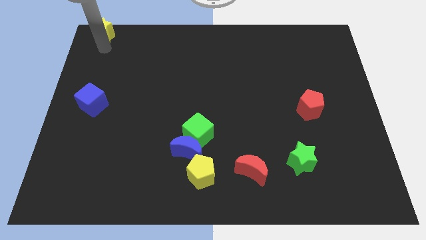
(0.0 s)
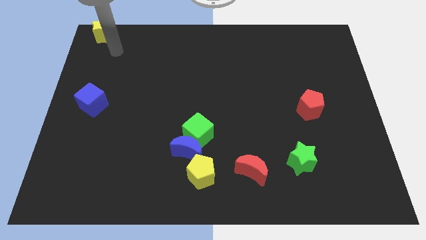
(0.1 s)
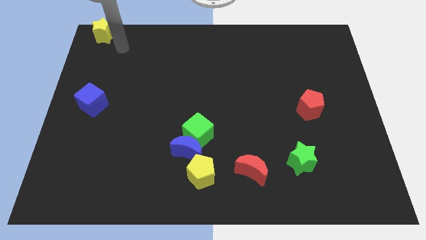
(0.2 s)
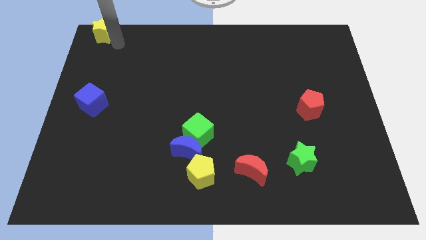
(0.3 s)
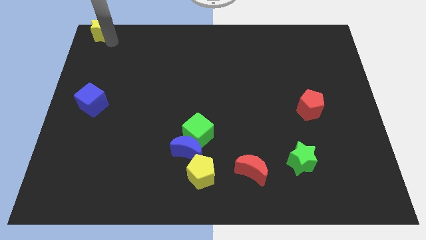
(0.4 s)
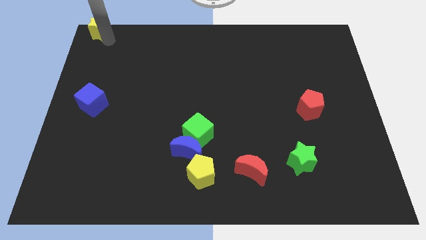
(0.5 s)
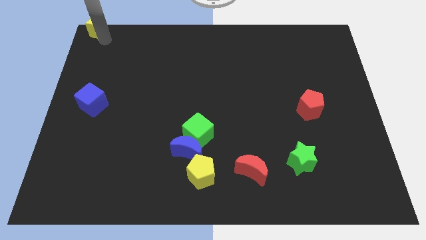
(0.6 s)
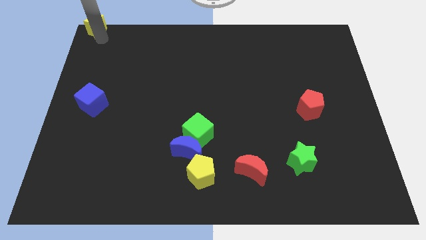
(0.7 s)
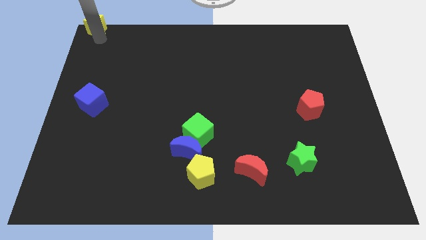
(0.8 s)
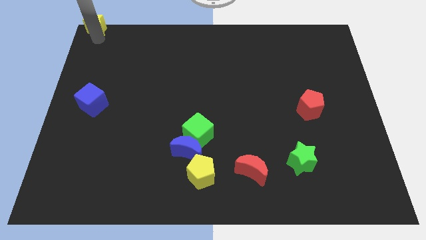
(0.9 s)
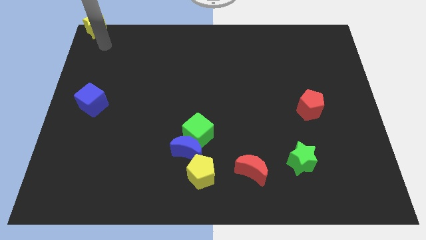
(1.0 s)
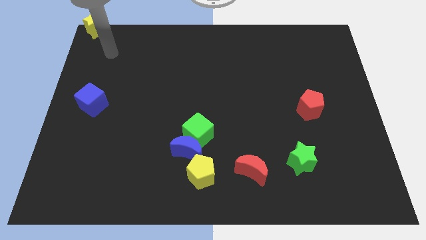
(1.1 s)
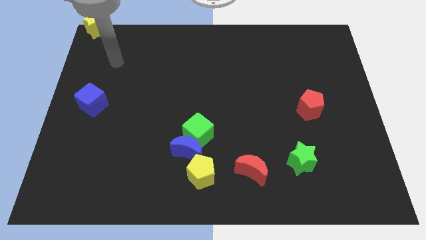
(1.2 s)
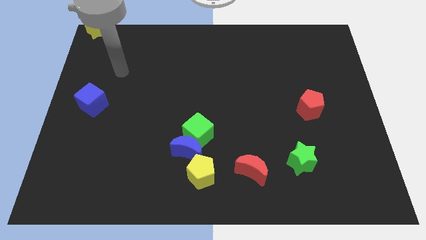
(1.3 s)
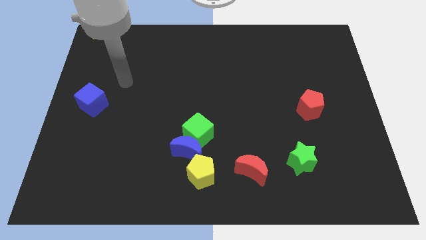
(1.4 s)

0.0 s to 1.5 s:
place yellow star to the top left corner of the board

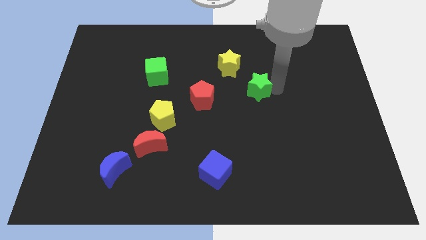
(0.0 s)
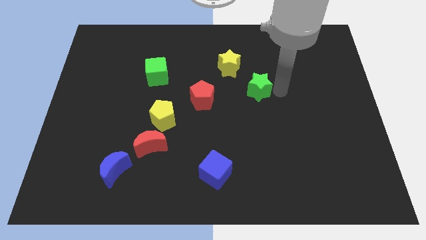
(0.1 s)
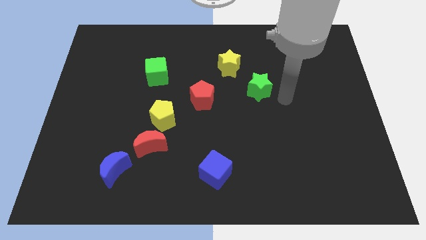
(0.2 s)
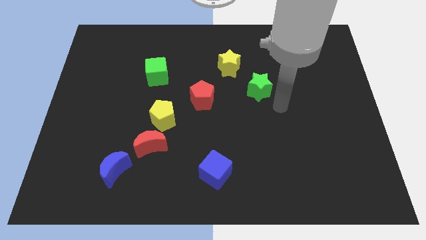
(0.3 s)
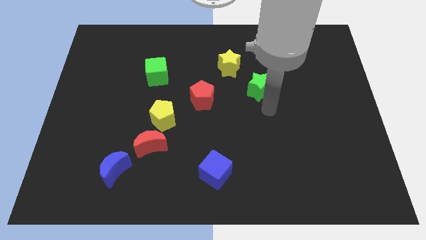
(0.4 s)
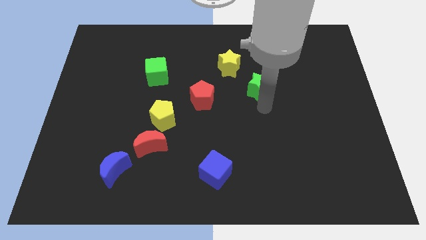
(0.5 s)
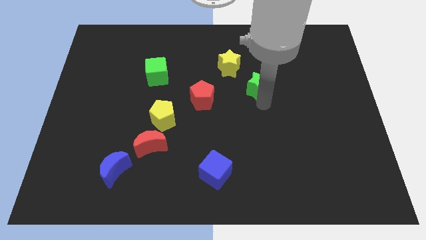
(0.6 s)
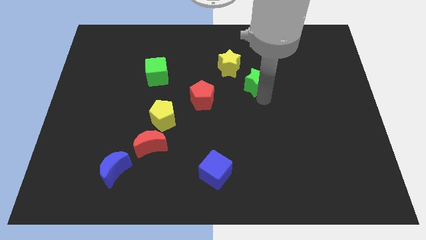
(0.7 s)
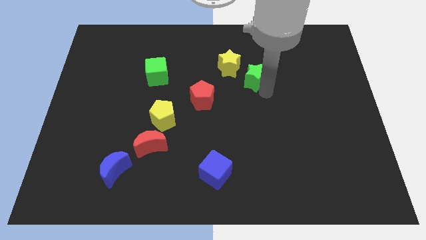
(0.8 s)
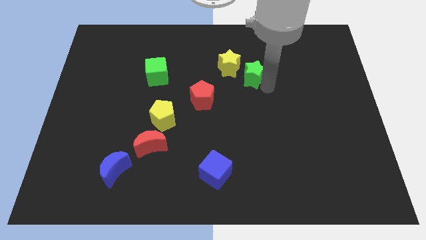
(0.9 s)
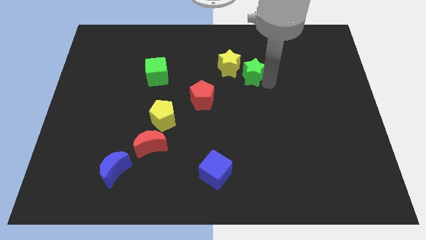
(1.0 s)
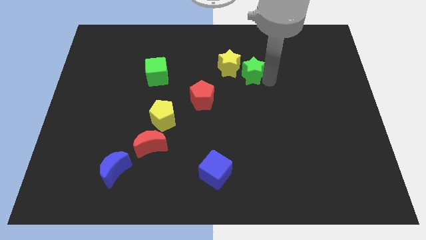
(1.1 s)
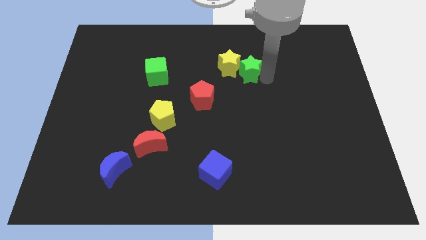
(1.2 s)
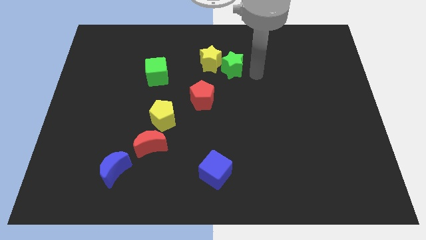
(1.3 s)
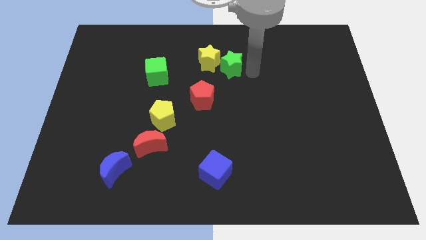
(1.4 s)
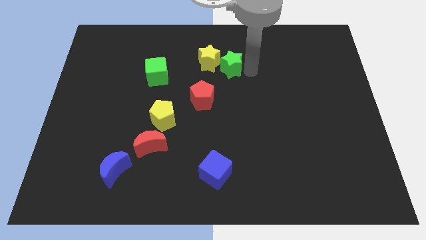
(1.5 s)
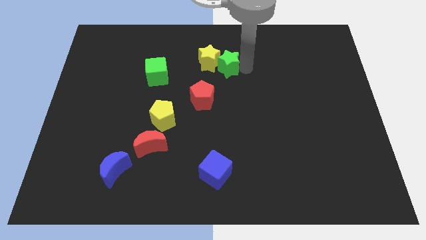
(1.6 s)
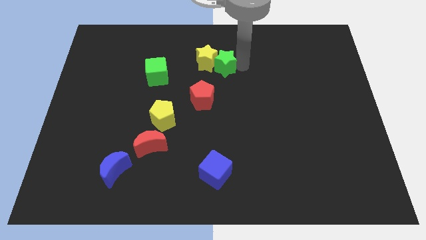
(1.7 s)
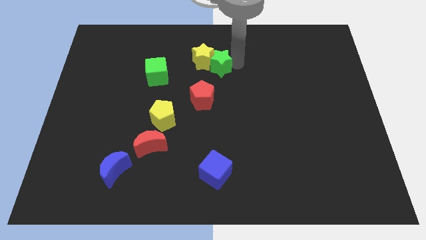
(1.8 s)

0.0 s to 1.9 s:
push the green star into the right side of the yellow star

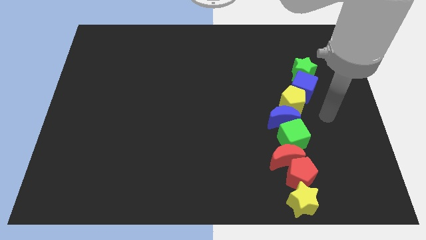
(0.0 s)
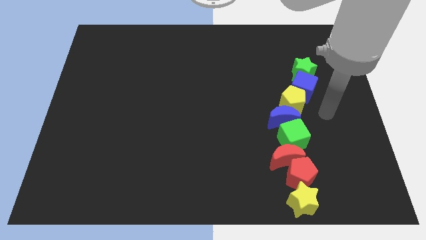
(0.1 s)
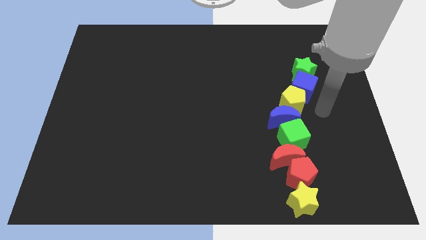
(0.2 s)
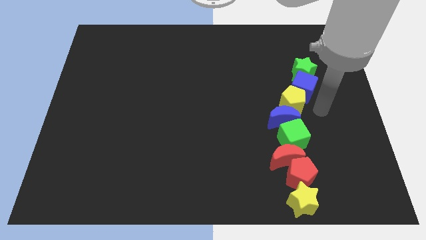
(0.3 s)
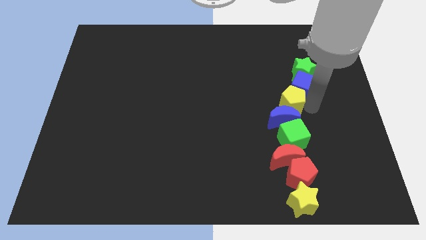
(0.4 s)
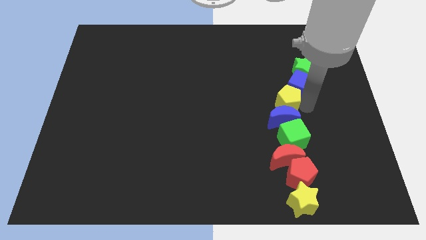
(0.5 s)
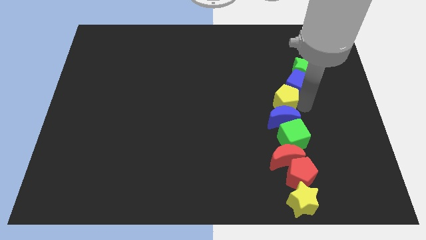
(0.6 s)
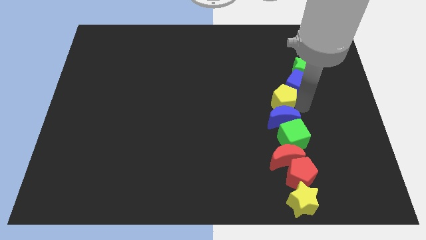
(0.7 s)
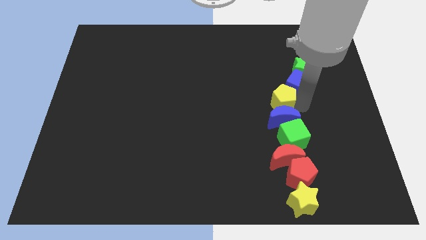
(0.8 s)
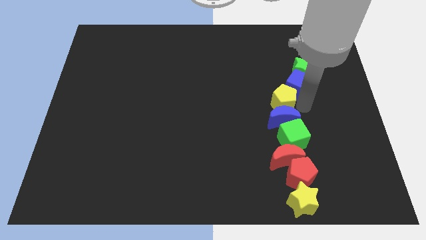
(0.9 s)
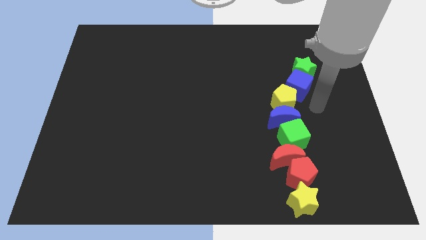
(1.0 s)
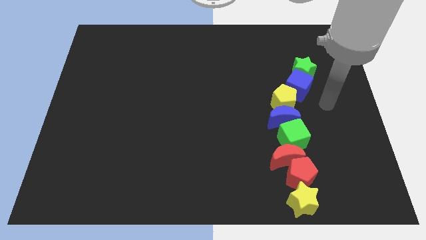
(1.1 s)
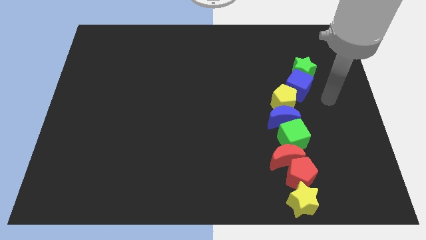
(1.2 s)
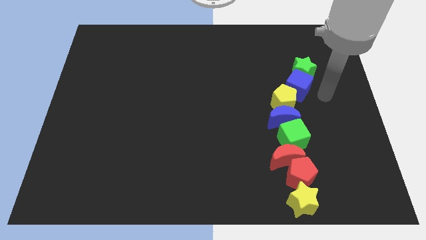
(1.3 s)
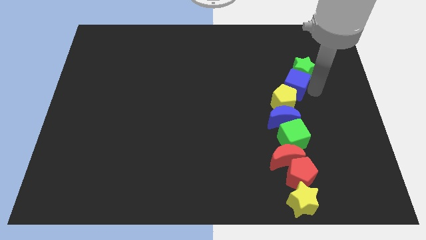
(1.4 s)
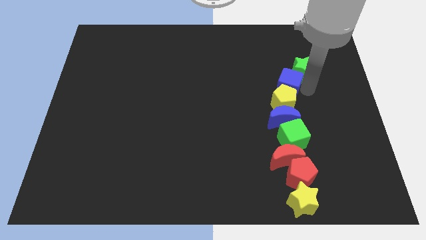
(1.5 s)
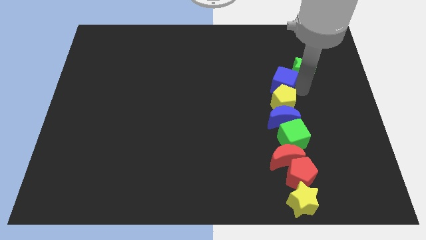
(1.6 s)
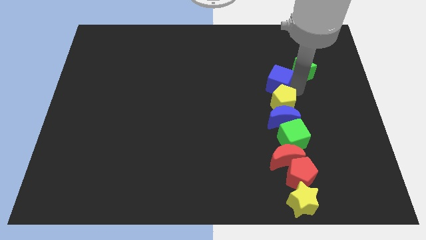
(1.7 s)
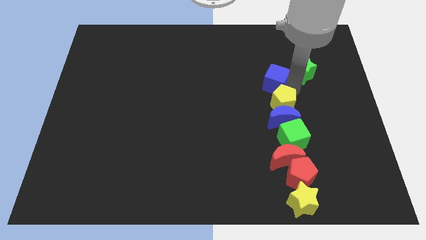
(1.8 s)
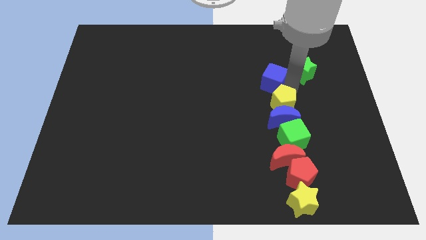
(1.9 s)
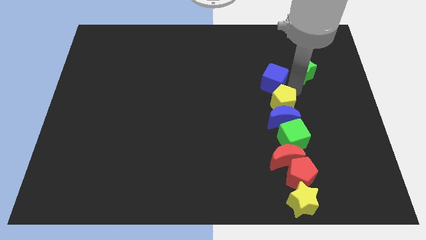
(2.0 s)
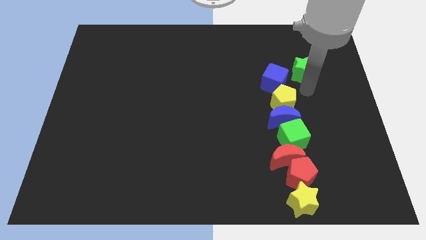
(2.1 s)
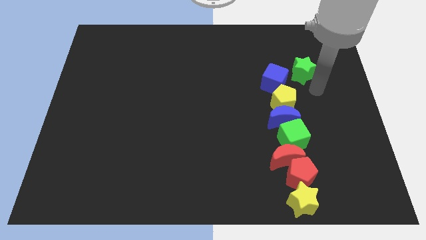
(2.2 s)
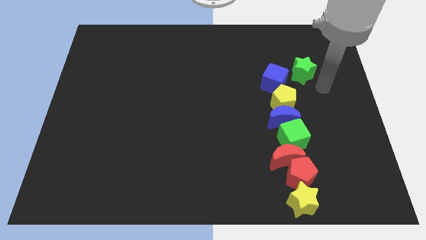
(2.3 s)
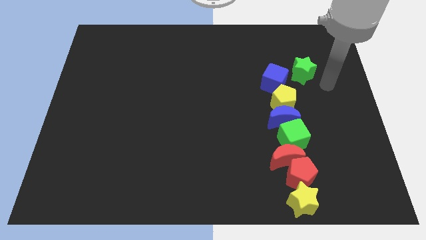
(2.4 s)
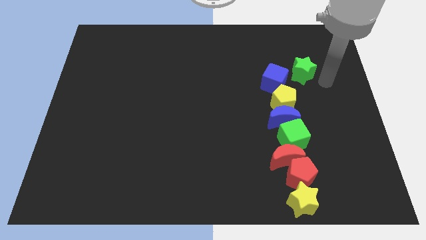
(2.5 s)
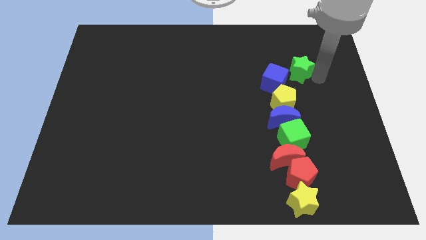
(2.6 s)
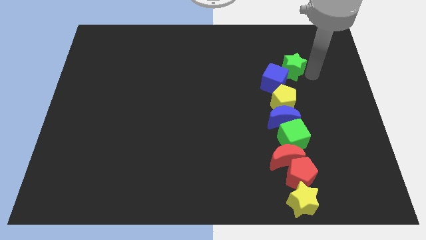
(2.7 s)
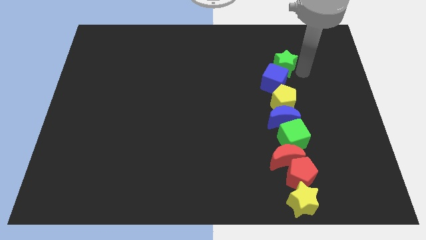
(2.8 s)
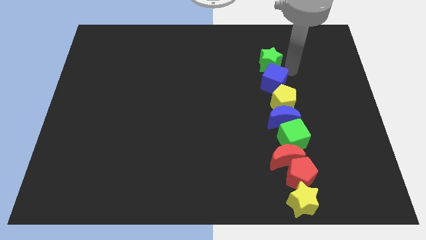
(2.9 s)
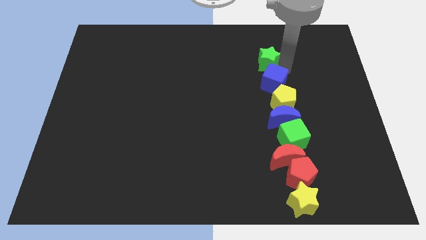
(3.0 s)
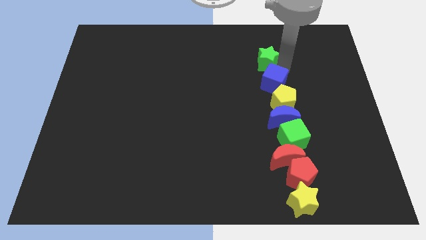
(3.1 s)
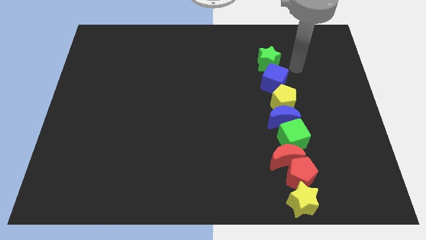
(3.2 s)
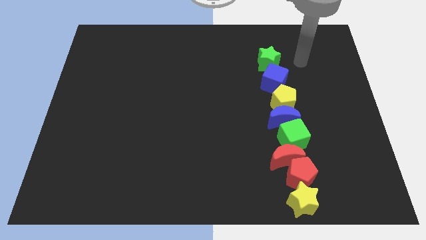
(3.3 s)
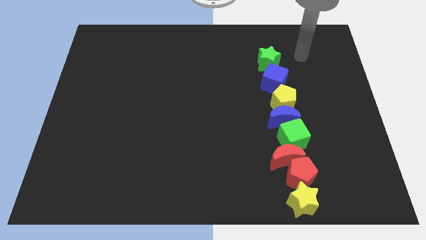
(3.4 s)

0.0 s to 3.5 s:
adjust the yellow pentagon blue cube and green star in a line at the top of the blue moon

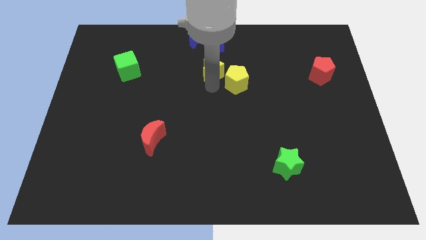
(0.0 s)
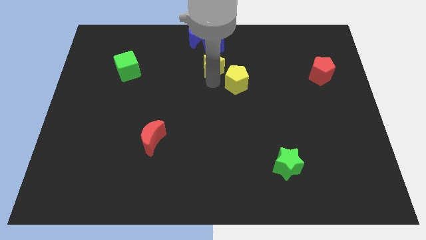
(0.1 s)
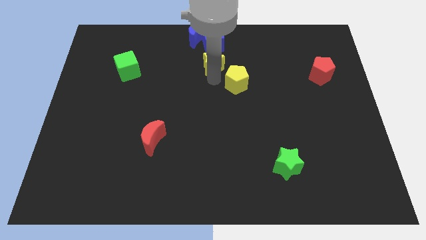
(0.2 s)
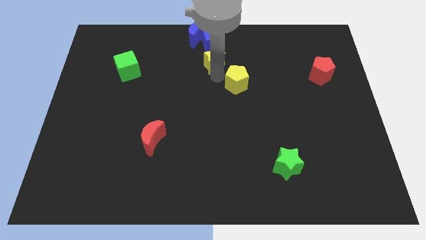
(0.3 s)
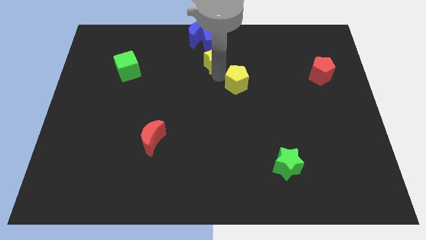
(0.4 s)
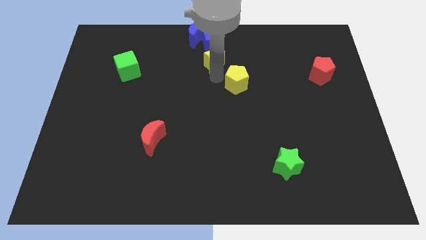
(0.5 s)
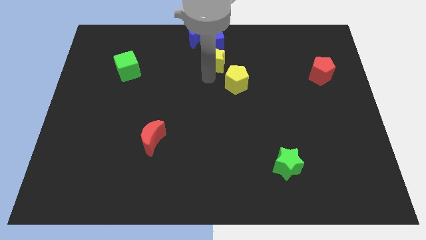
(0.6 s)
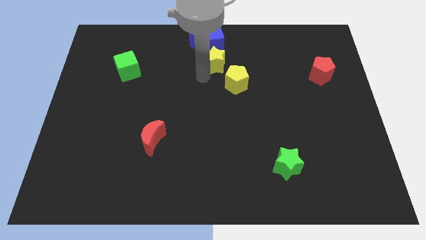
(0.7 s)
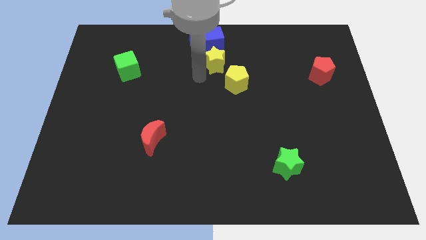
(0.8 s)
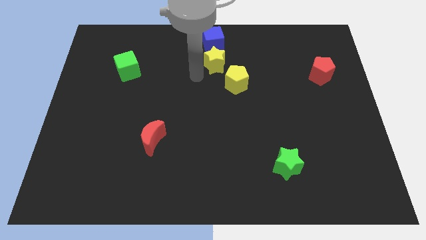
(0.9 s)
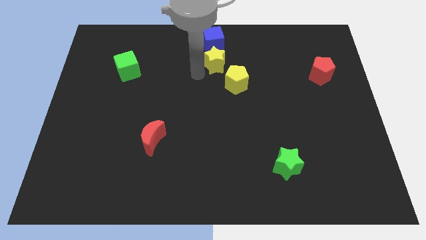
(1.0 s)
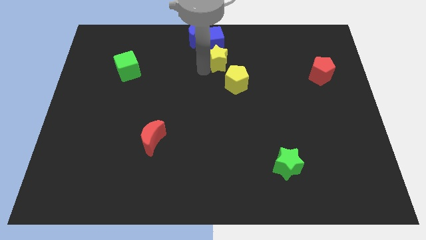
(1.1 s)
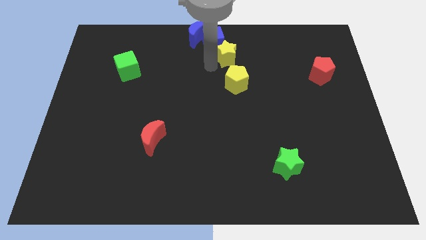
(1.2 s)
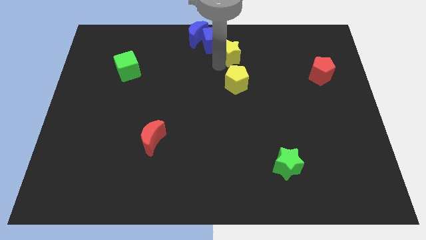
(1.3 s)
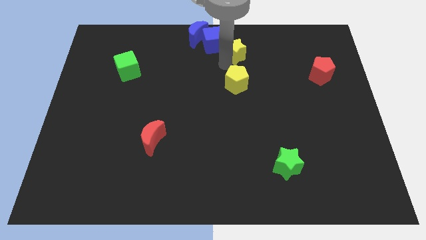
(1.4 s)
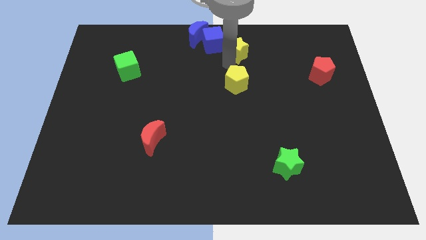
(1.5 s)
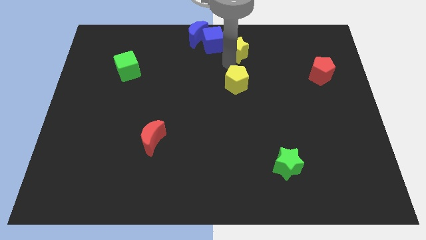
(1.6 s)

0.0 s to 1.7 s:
place yellow star below the blue cube

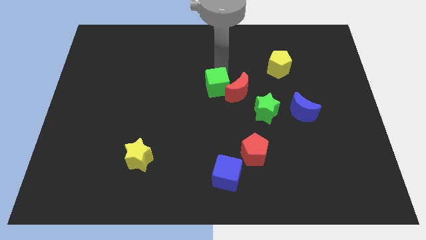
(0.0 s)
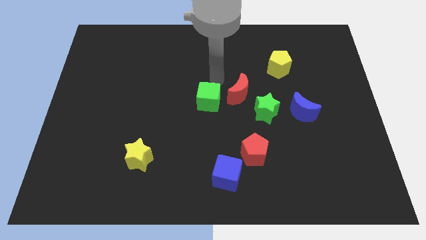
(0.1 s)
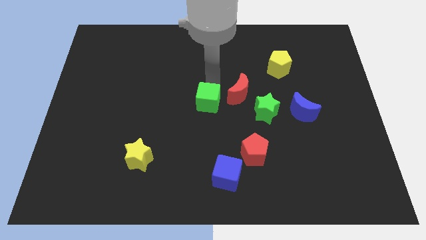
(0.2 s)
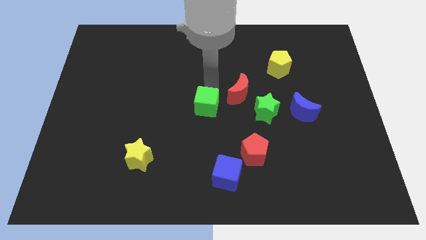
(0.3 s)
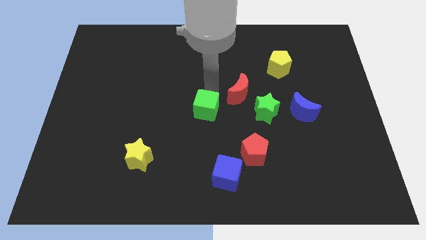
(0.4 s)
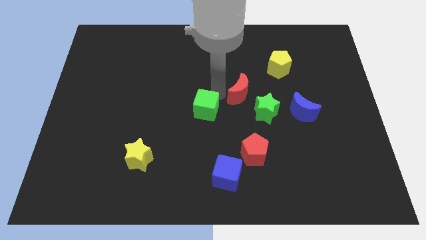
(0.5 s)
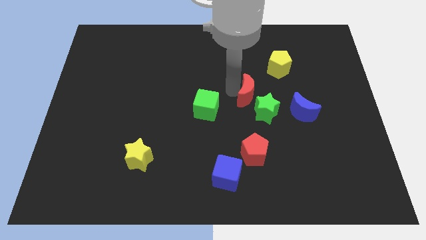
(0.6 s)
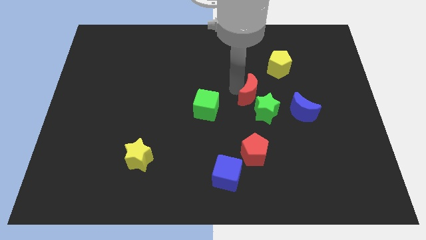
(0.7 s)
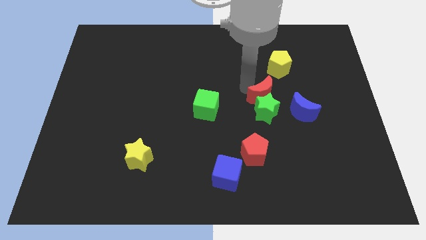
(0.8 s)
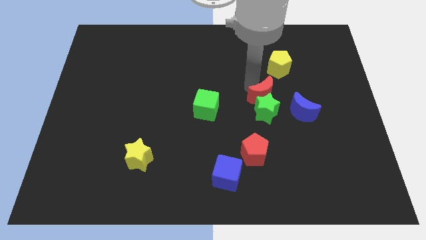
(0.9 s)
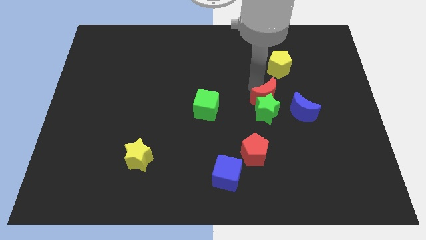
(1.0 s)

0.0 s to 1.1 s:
separate red moon and green cube
